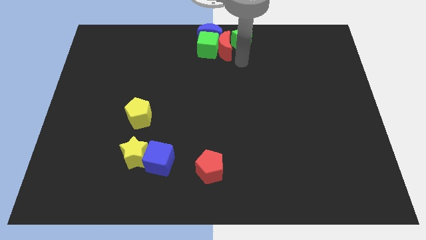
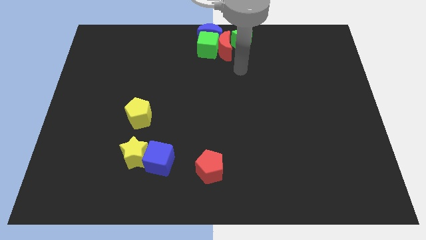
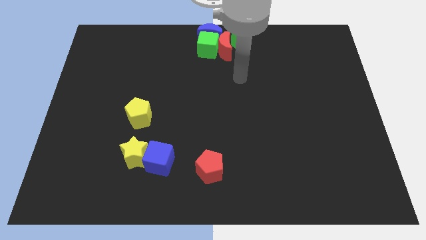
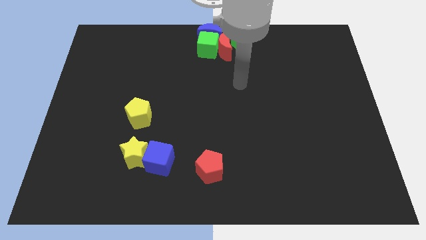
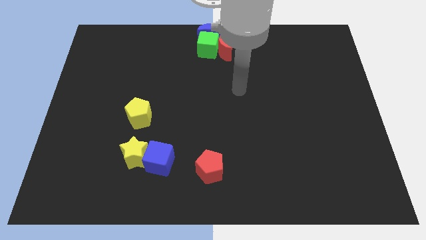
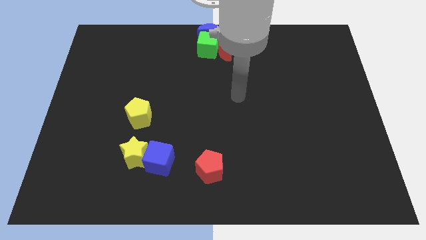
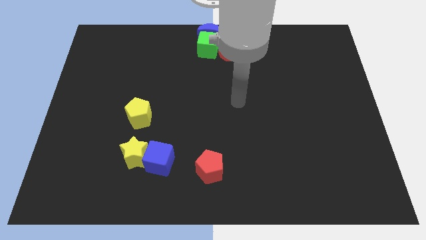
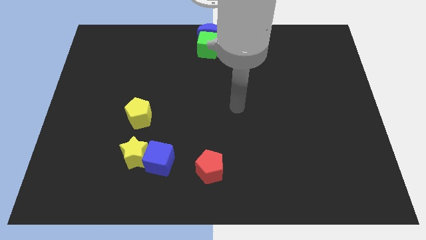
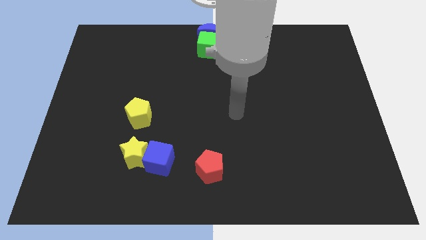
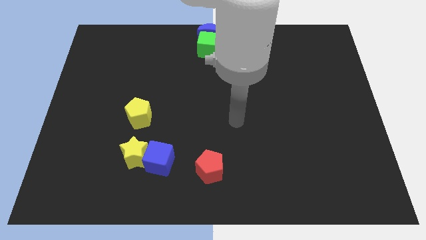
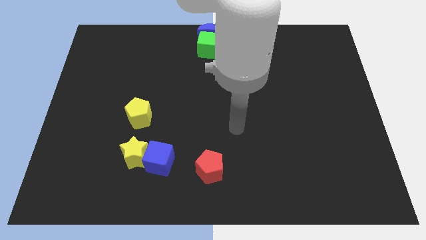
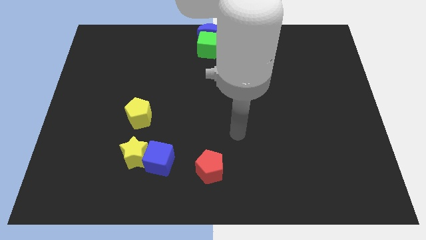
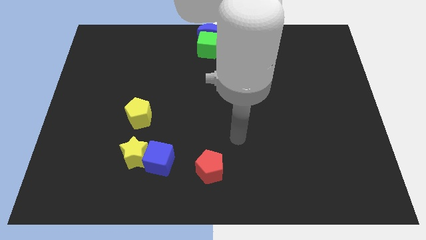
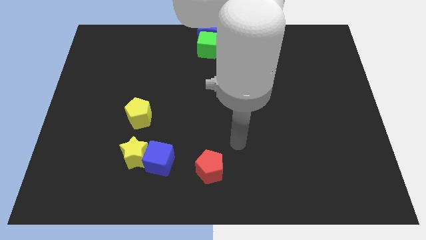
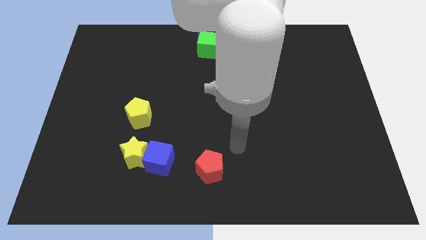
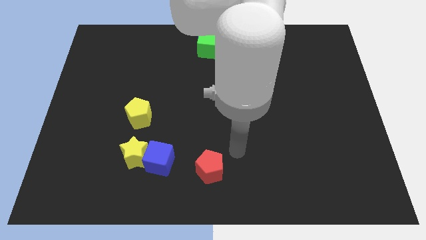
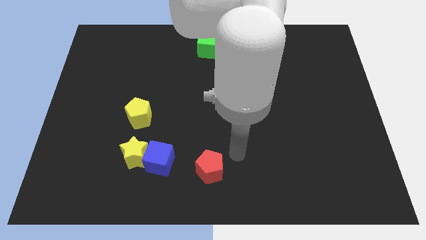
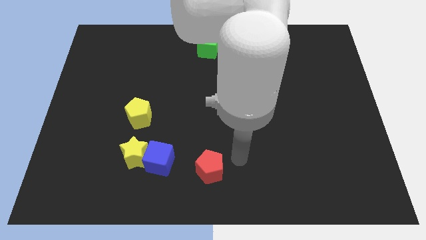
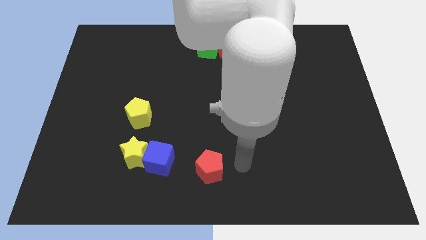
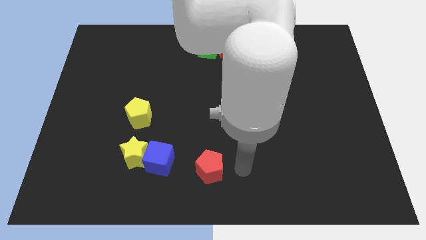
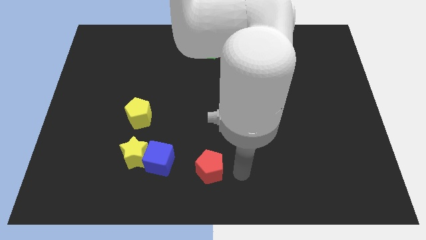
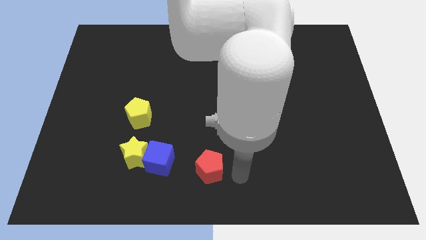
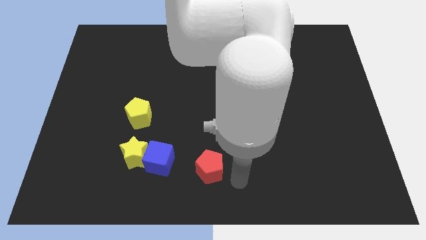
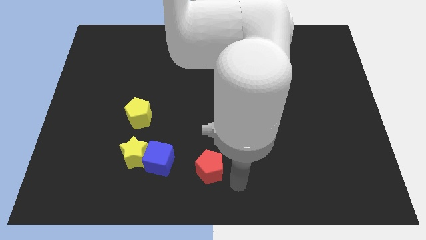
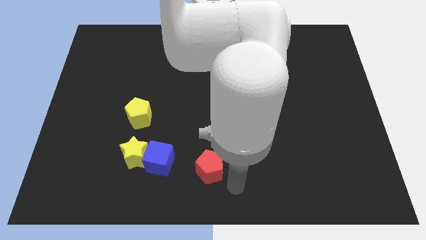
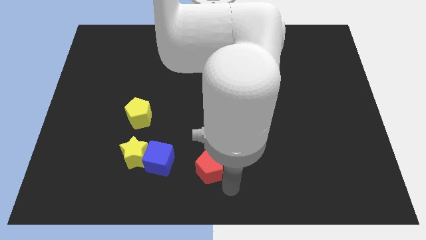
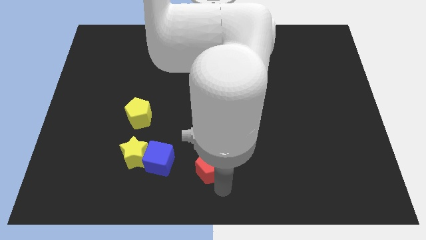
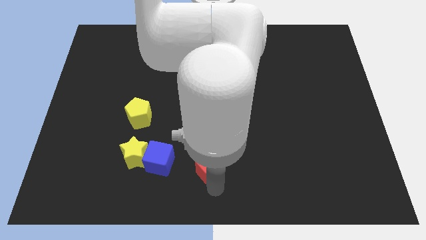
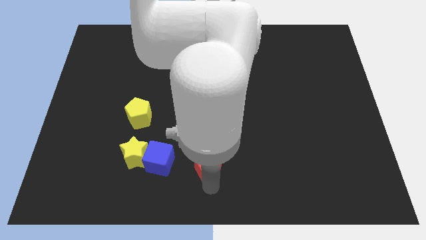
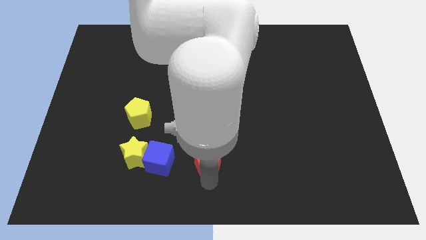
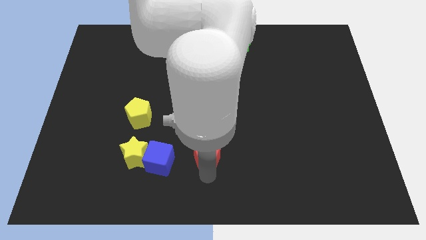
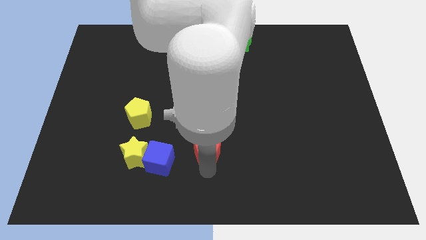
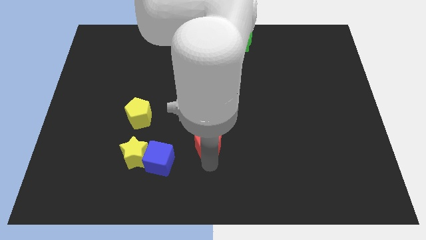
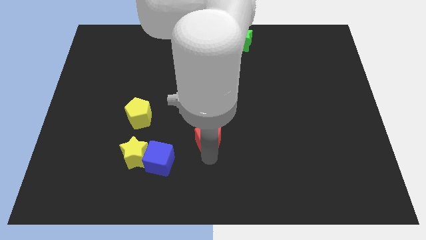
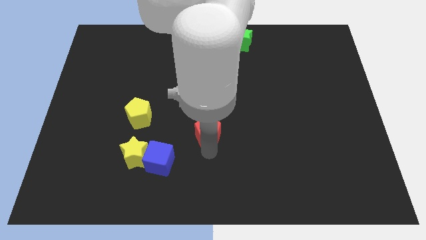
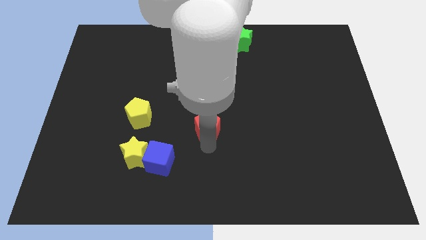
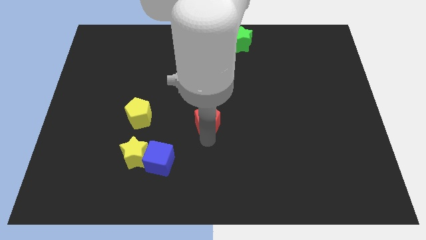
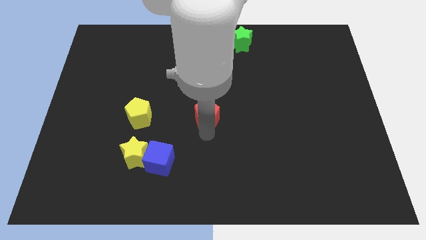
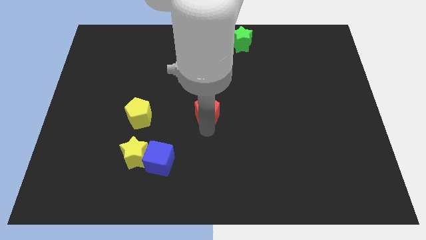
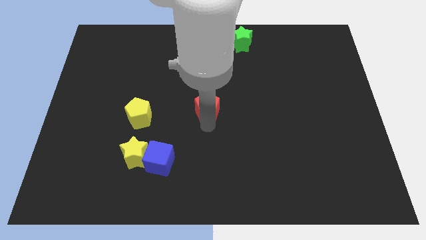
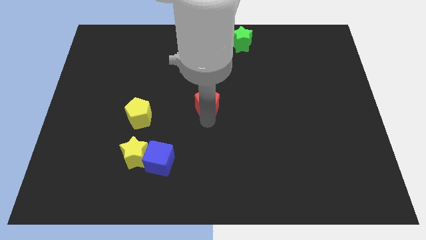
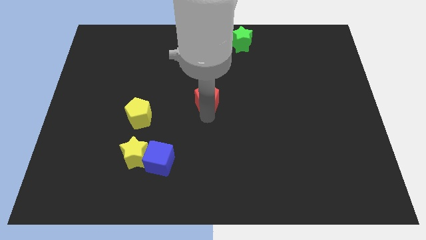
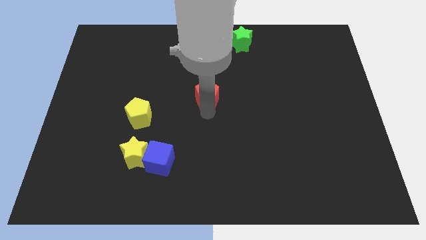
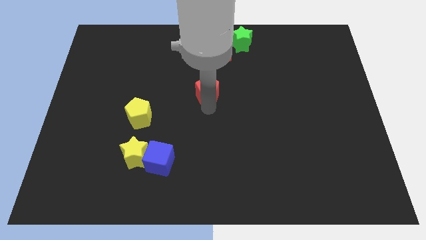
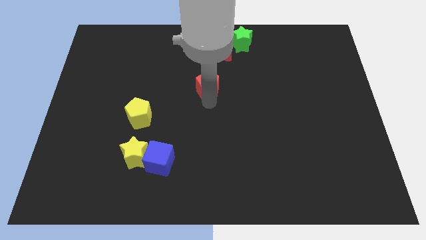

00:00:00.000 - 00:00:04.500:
move the red pentagon to the center of the board

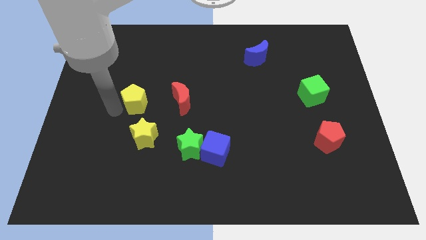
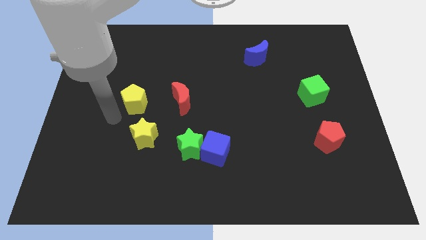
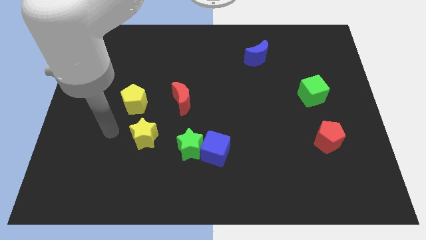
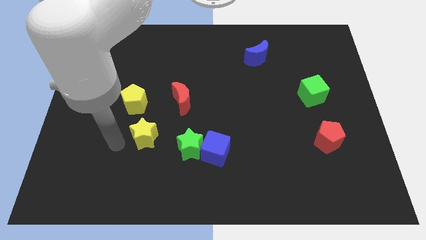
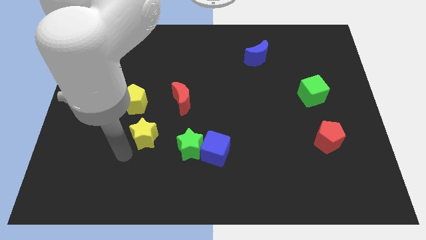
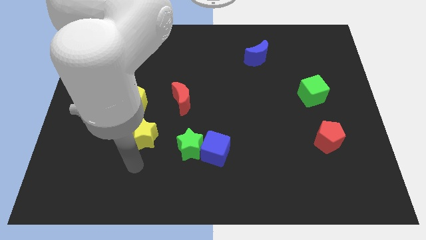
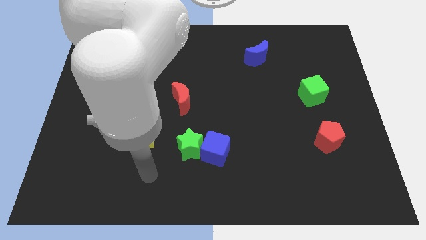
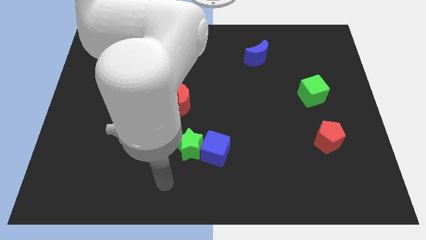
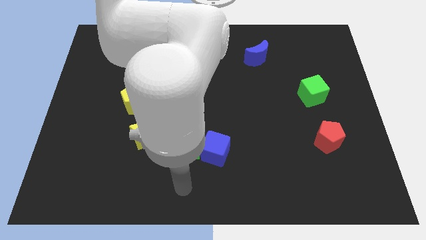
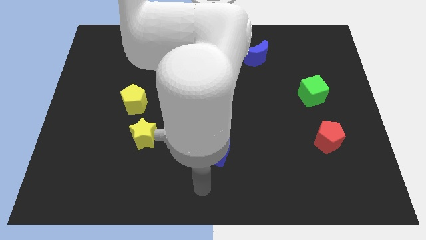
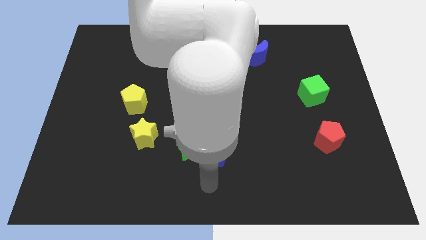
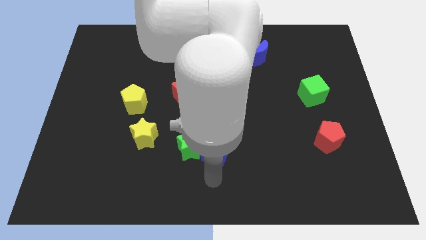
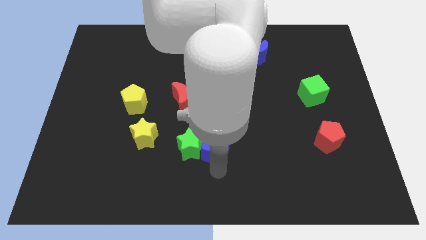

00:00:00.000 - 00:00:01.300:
place the arm down to the blue cube

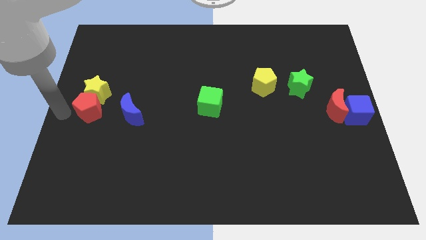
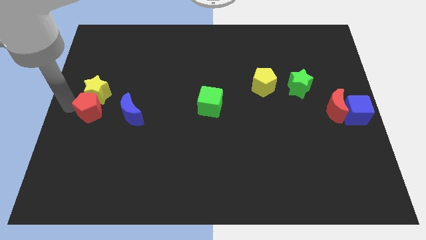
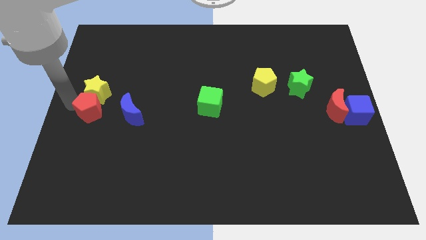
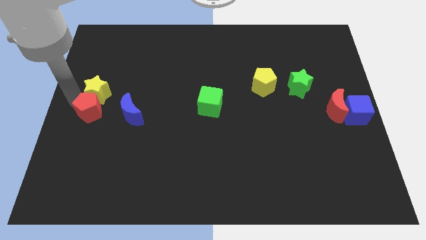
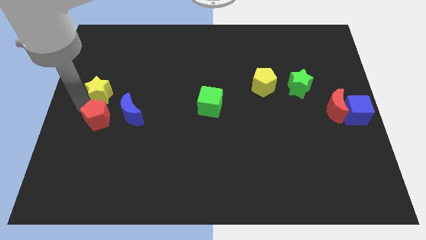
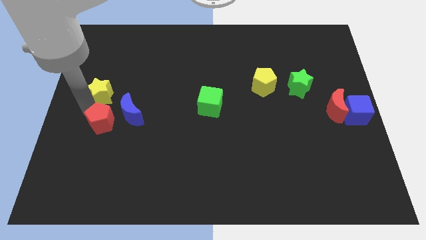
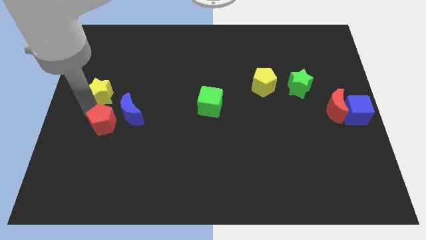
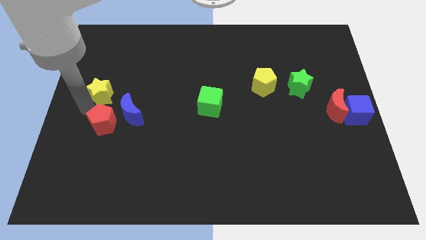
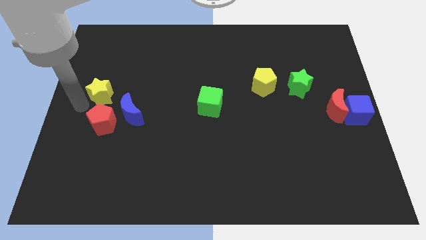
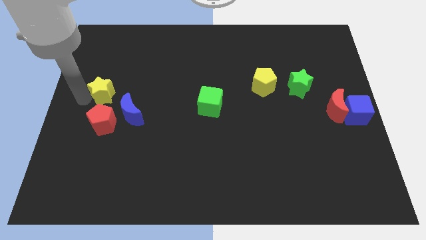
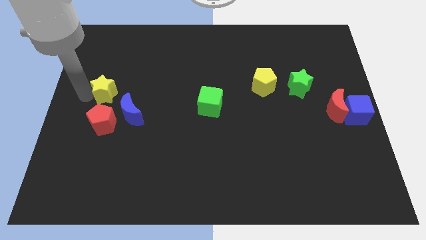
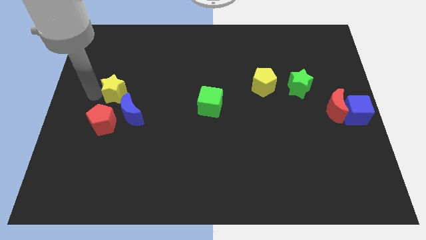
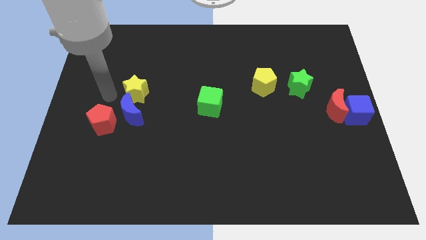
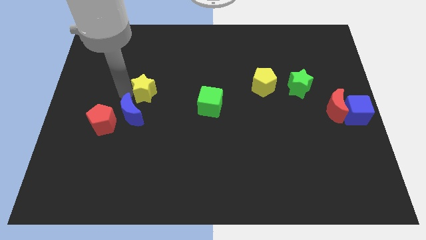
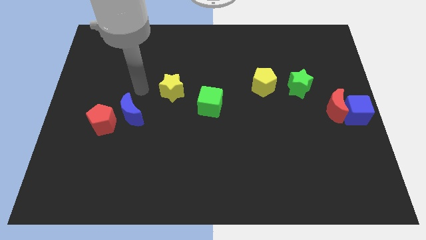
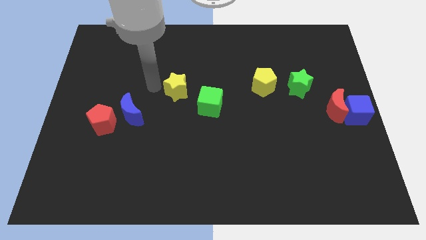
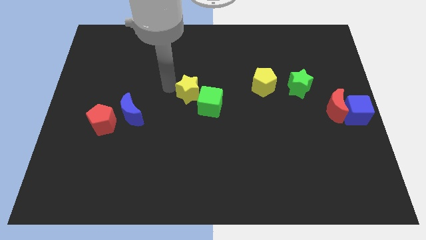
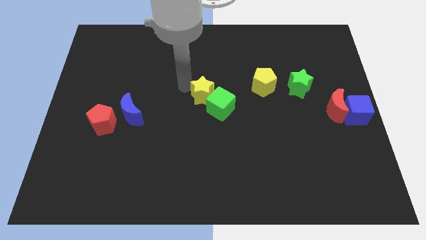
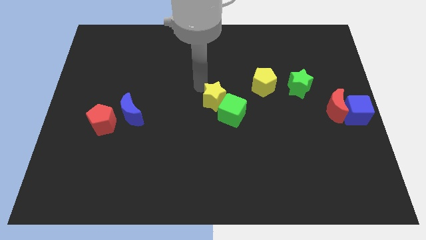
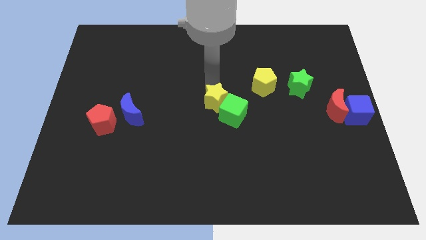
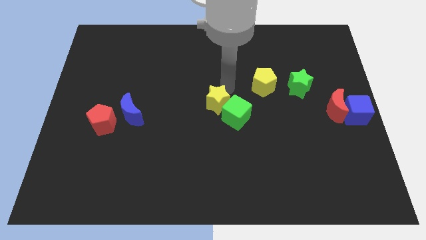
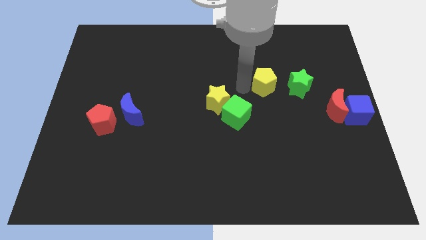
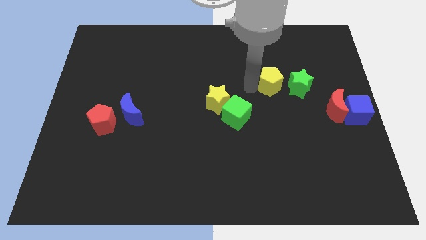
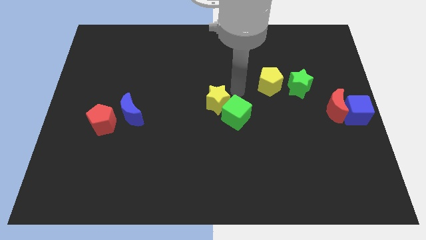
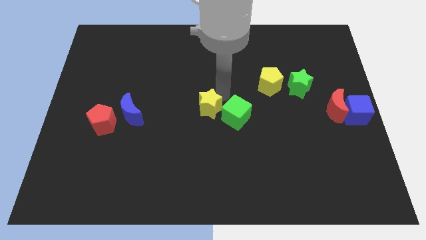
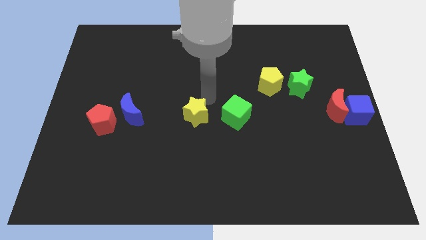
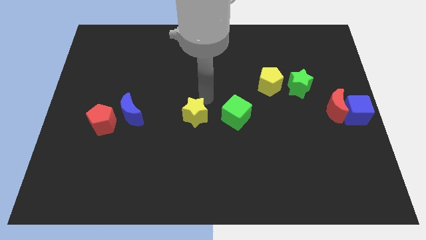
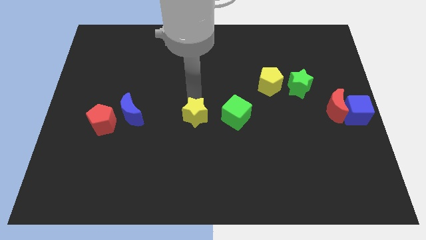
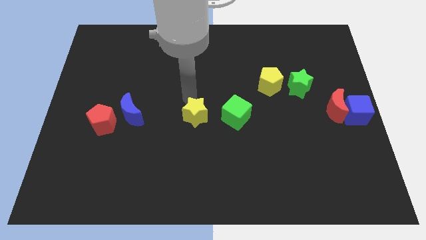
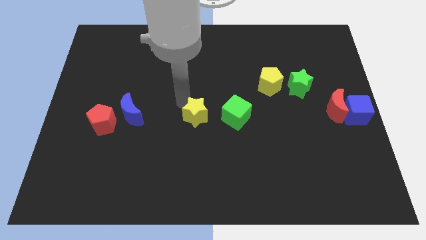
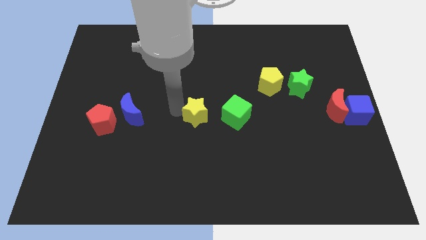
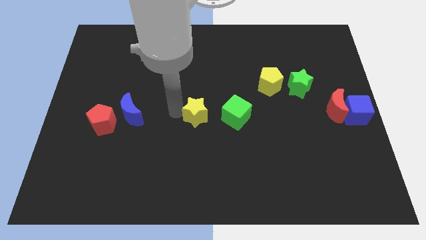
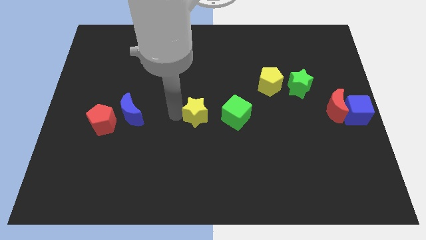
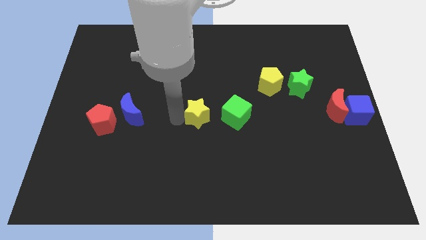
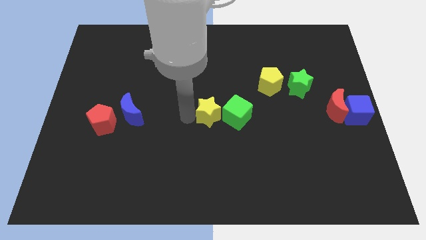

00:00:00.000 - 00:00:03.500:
separate yellow star from the red pentagon
